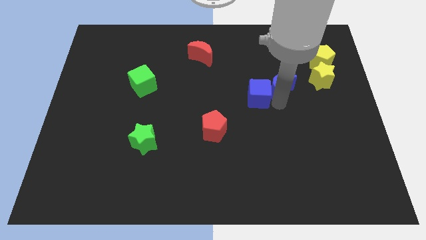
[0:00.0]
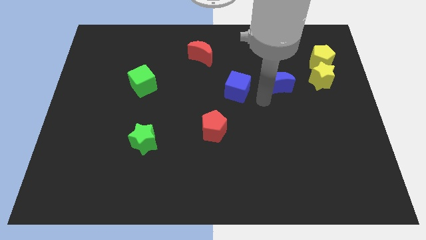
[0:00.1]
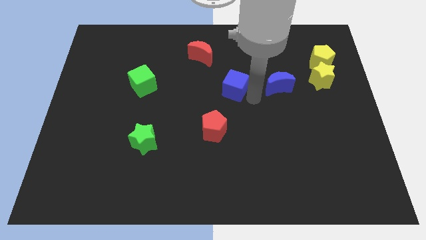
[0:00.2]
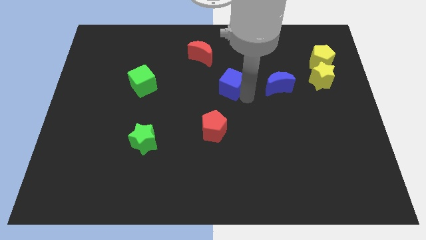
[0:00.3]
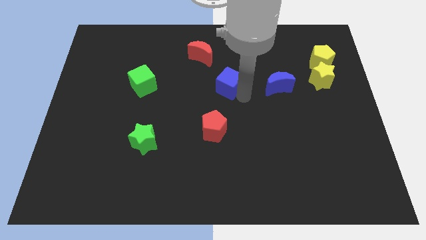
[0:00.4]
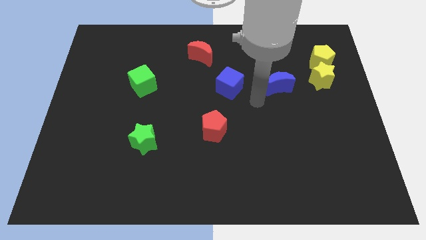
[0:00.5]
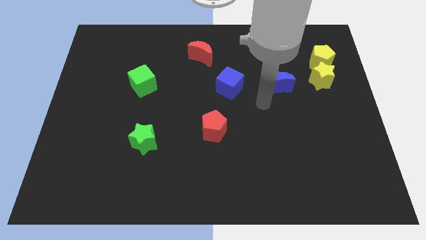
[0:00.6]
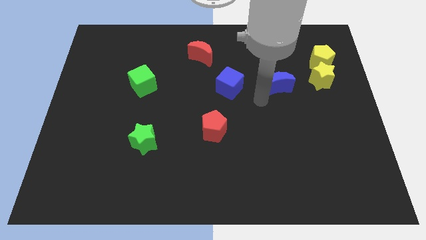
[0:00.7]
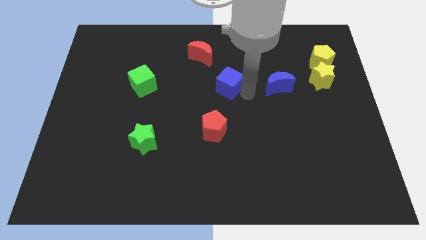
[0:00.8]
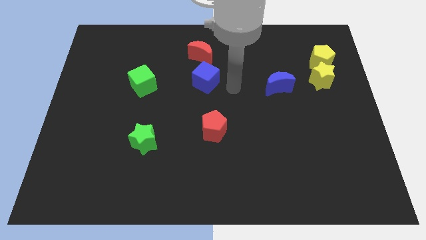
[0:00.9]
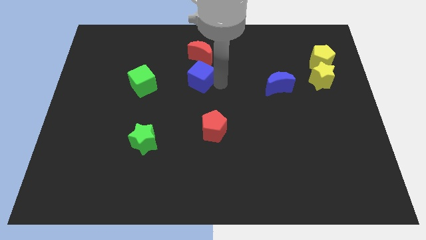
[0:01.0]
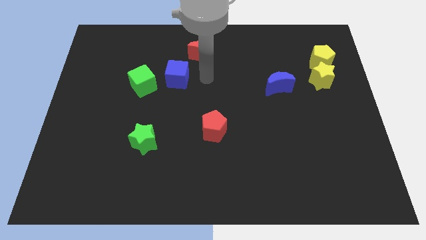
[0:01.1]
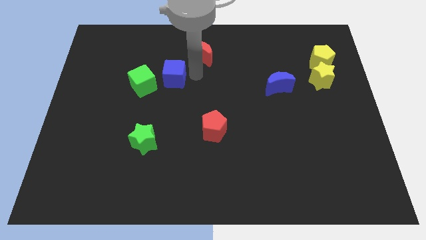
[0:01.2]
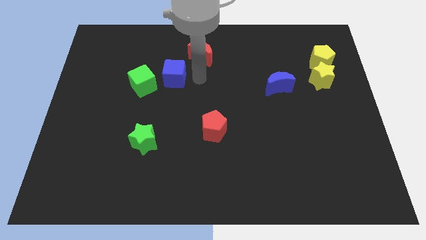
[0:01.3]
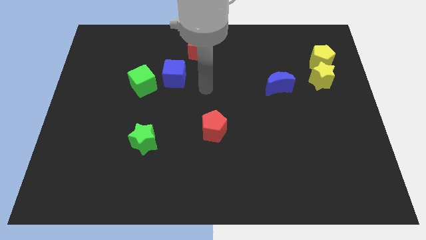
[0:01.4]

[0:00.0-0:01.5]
move the blue cube close to the green cube

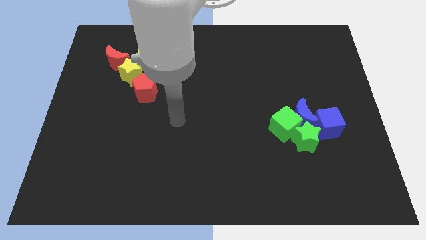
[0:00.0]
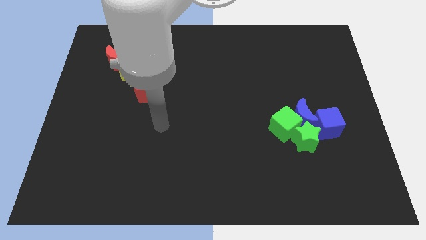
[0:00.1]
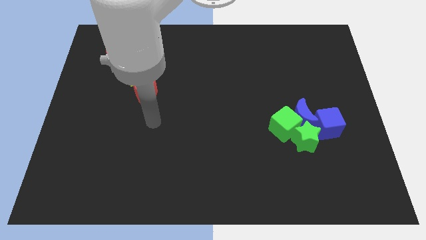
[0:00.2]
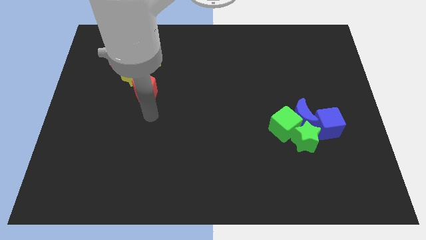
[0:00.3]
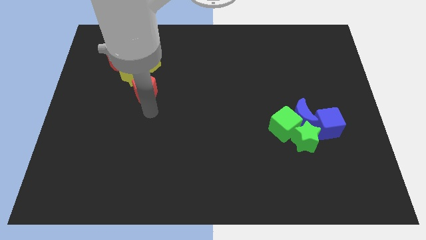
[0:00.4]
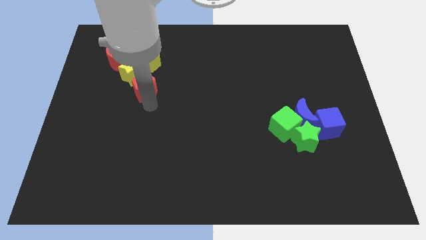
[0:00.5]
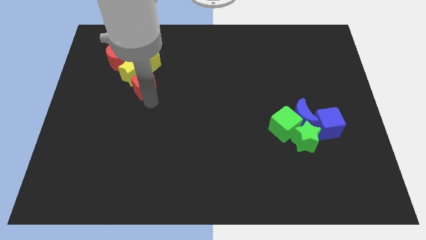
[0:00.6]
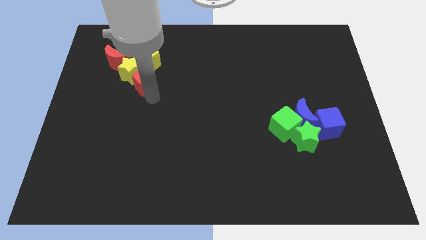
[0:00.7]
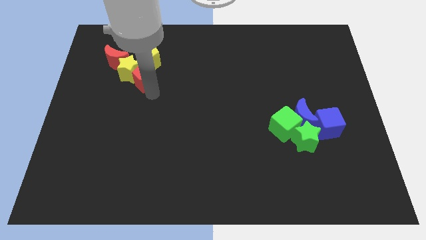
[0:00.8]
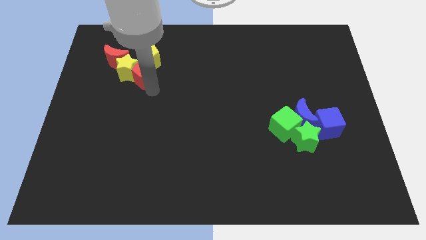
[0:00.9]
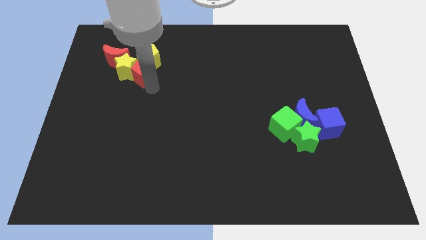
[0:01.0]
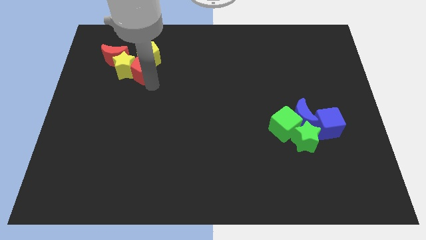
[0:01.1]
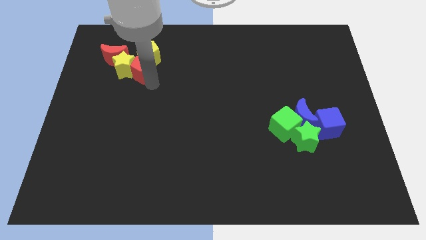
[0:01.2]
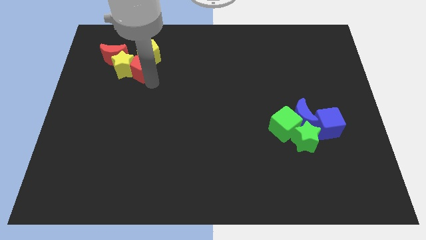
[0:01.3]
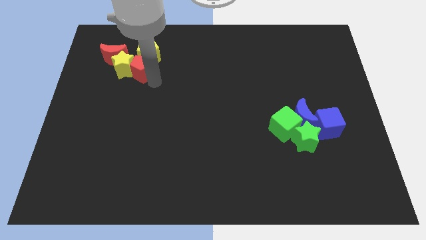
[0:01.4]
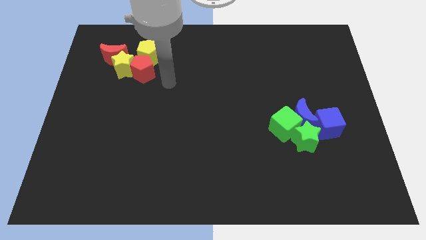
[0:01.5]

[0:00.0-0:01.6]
push red pentagon into the group of blocks

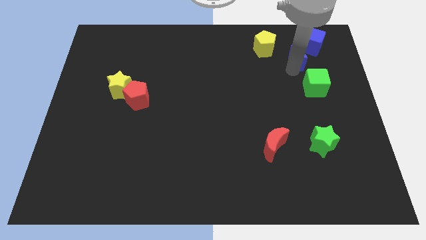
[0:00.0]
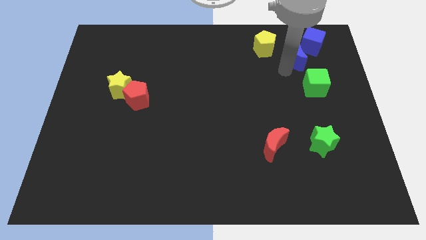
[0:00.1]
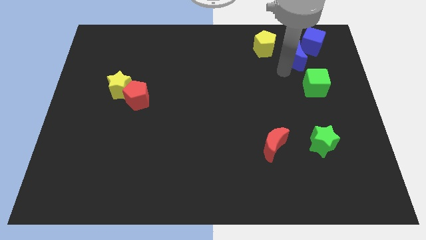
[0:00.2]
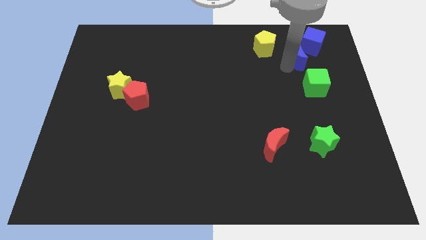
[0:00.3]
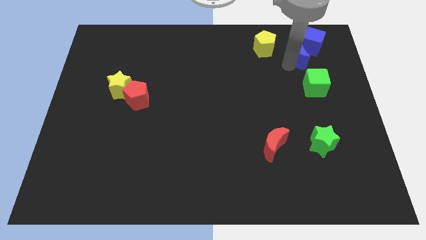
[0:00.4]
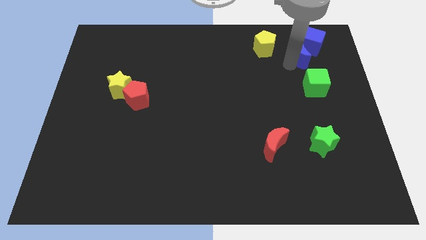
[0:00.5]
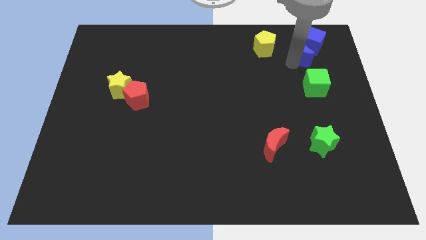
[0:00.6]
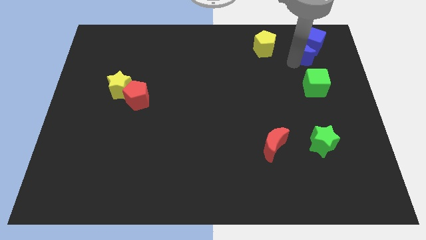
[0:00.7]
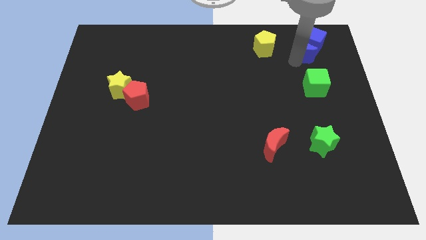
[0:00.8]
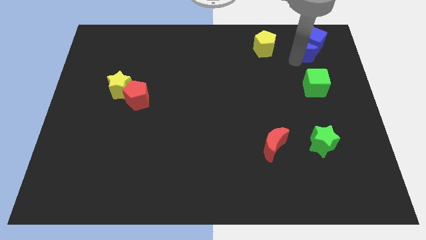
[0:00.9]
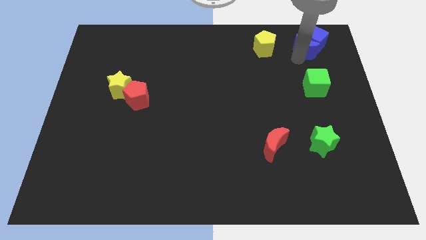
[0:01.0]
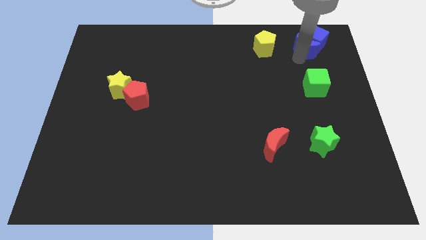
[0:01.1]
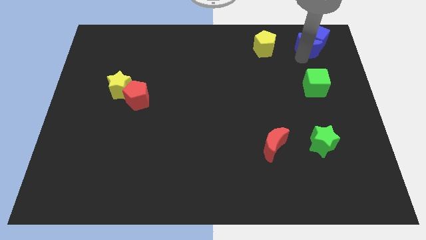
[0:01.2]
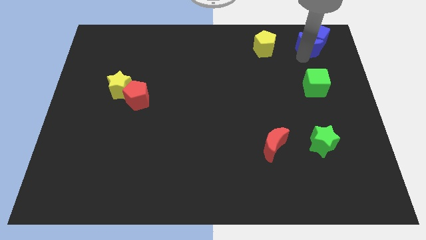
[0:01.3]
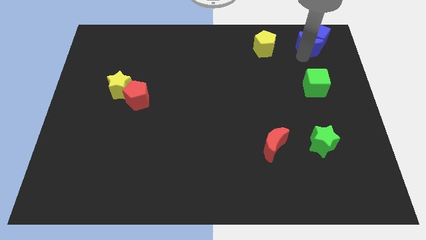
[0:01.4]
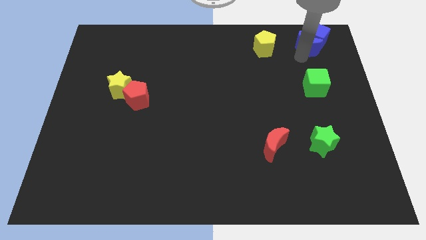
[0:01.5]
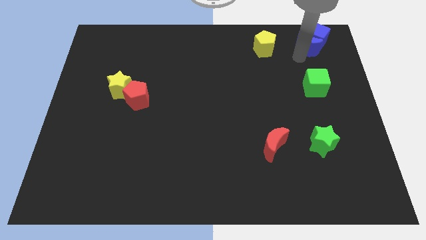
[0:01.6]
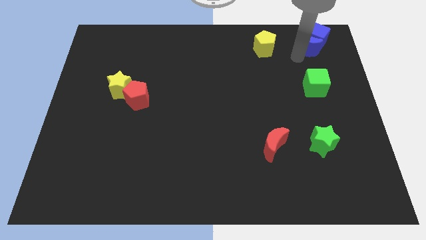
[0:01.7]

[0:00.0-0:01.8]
push blue crescent into the blue cube

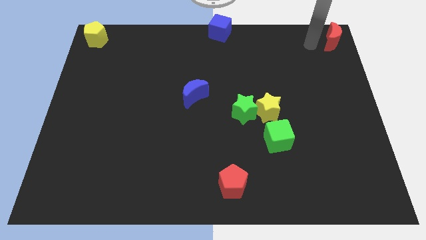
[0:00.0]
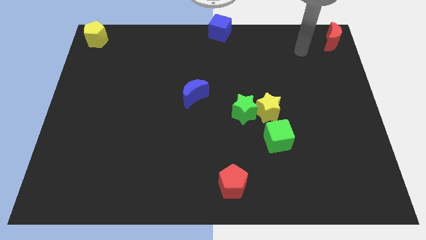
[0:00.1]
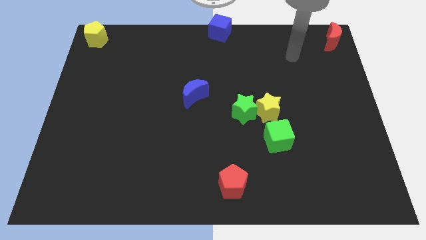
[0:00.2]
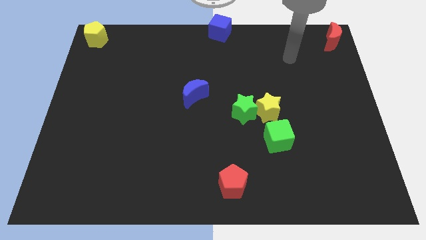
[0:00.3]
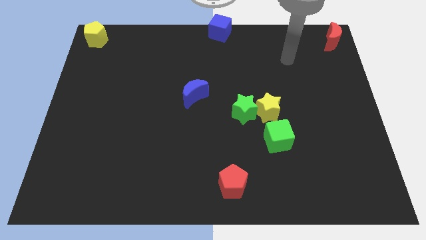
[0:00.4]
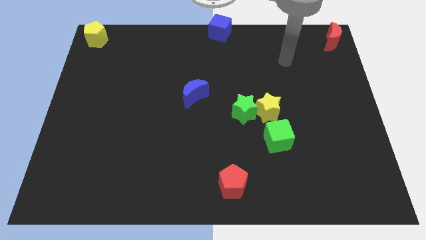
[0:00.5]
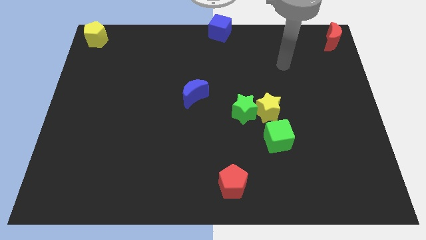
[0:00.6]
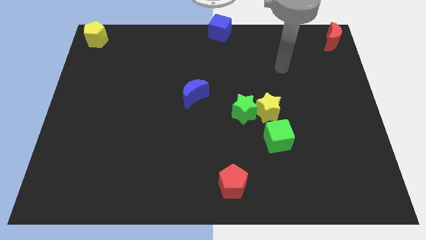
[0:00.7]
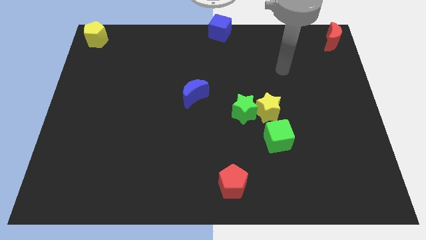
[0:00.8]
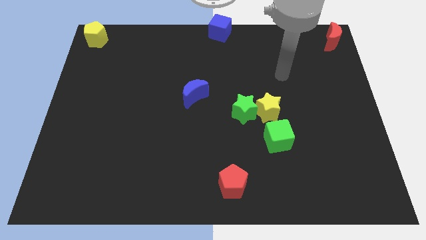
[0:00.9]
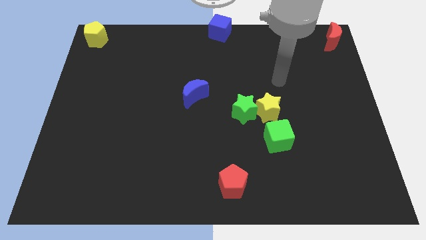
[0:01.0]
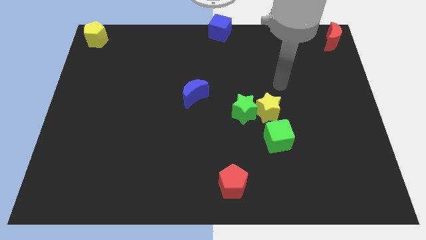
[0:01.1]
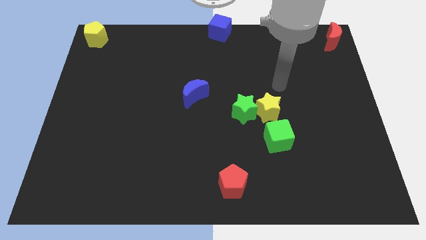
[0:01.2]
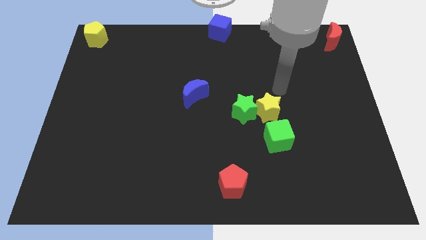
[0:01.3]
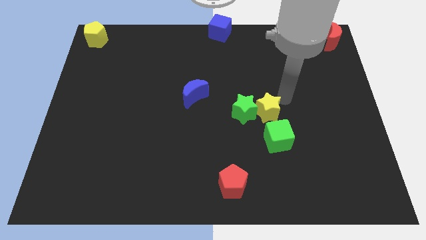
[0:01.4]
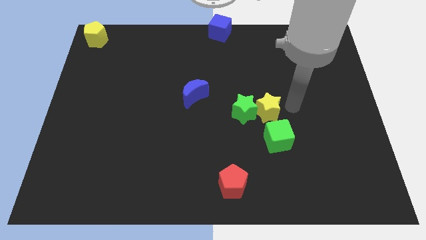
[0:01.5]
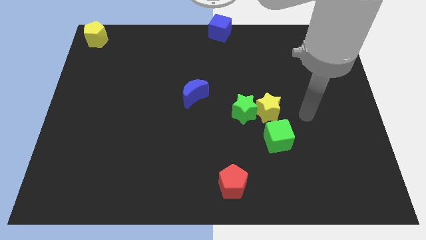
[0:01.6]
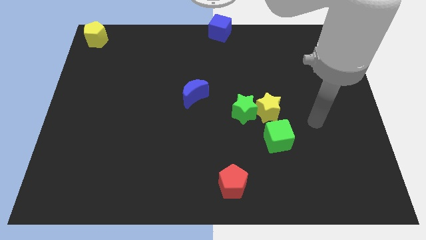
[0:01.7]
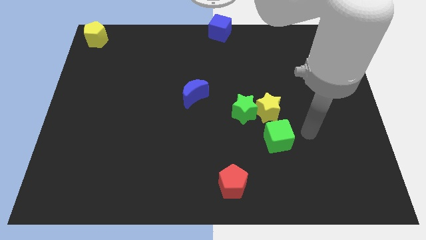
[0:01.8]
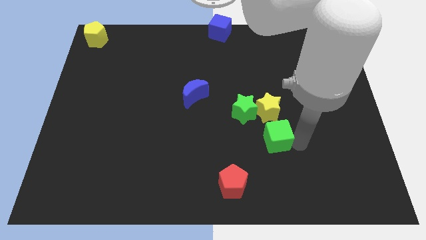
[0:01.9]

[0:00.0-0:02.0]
point the arm to the right of the green cube

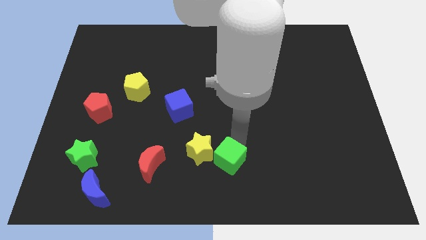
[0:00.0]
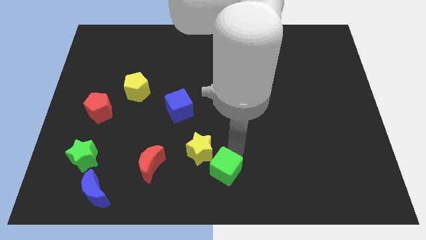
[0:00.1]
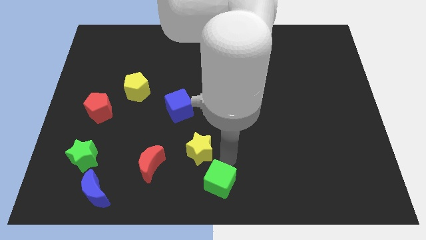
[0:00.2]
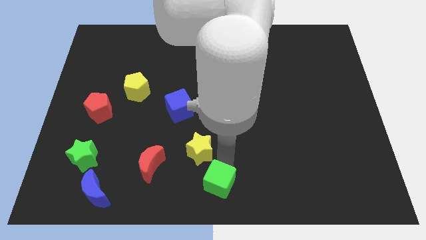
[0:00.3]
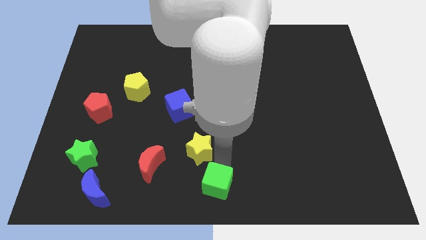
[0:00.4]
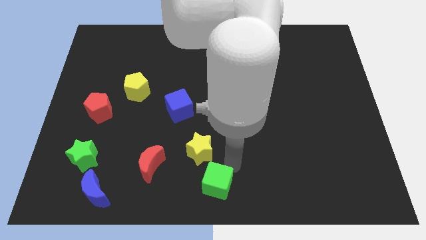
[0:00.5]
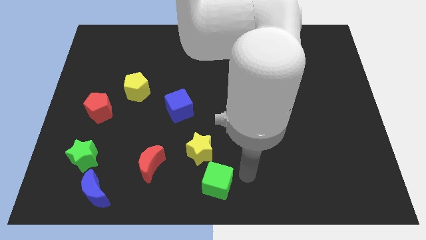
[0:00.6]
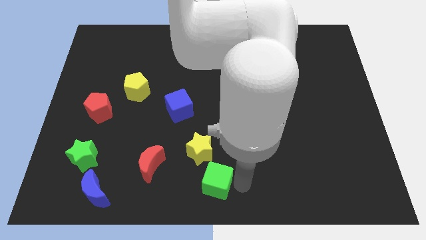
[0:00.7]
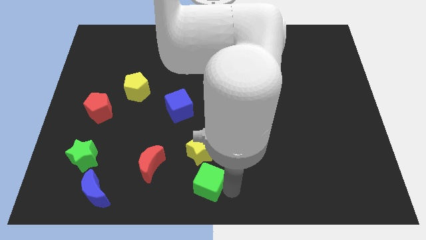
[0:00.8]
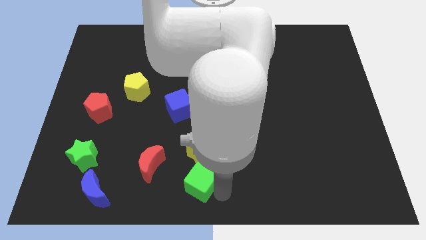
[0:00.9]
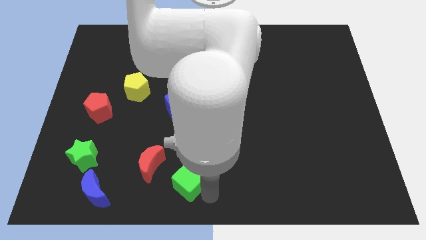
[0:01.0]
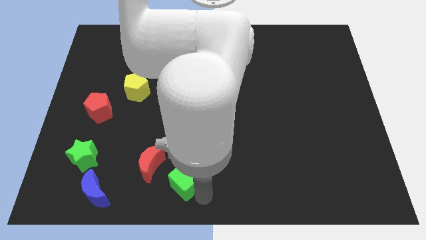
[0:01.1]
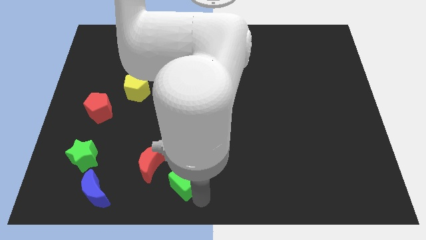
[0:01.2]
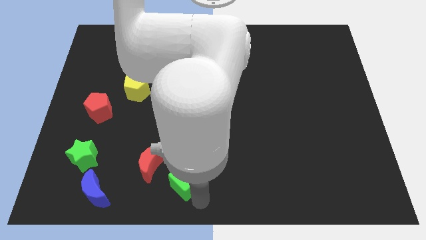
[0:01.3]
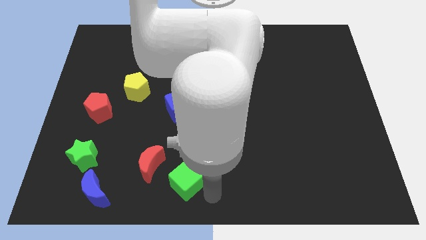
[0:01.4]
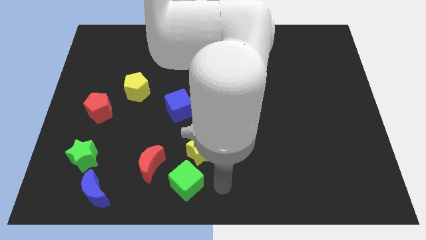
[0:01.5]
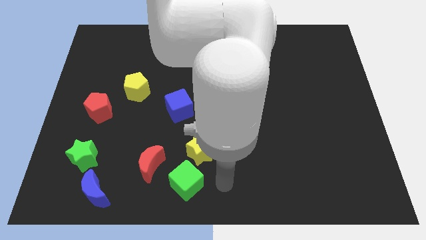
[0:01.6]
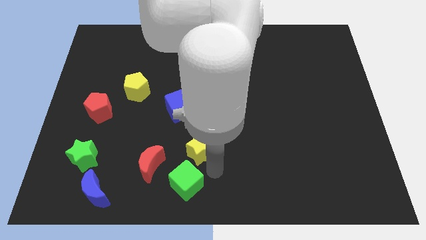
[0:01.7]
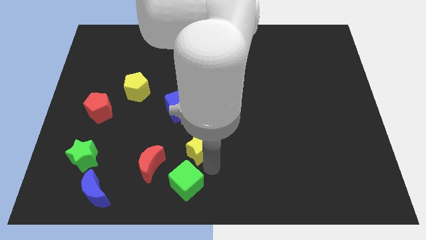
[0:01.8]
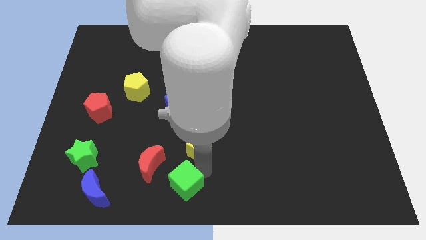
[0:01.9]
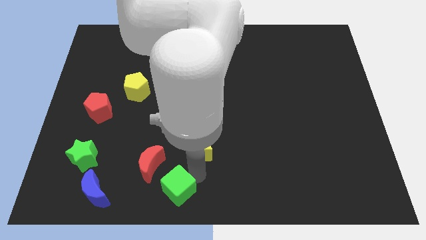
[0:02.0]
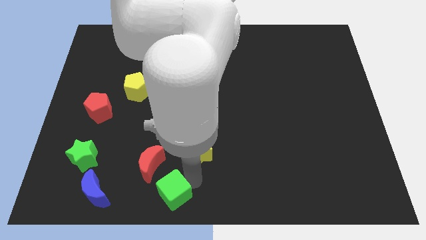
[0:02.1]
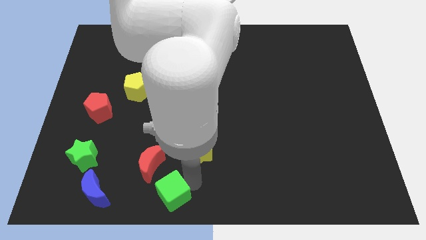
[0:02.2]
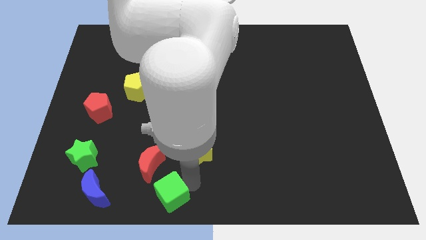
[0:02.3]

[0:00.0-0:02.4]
place the green cube to the bottom of red moon and yellow star
